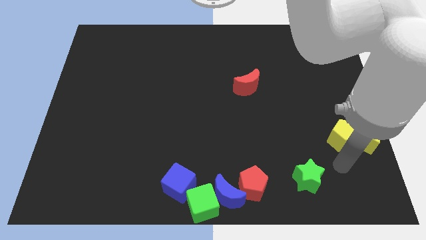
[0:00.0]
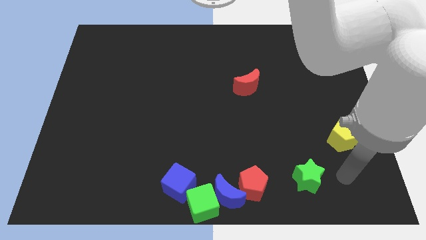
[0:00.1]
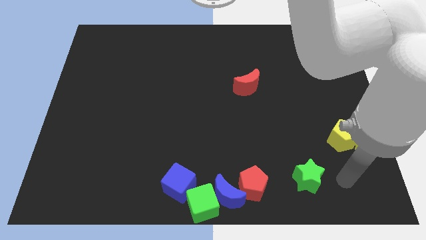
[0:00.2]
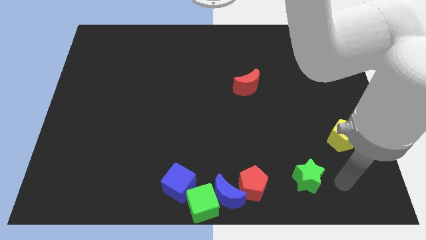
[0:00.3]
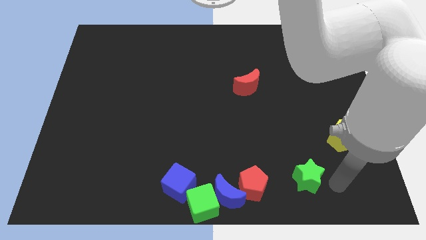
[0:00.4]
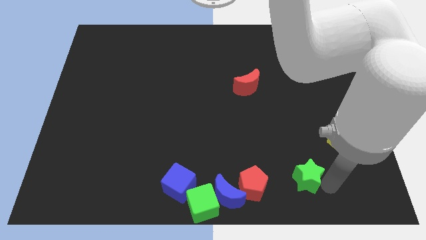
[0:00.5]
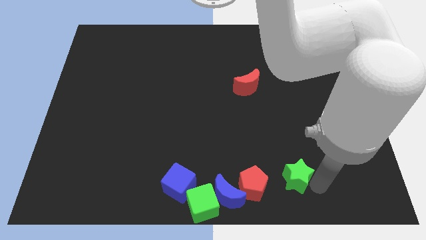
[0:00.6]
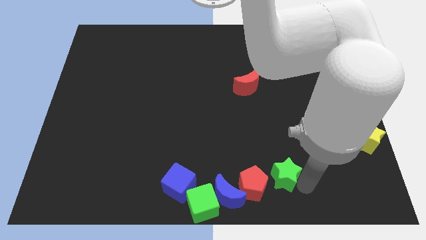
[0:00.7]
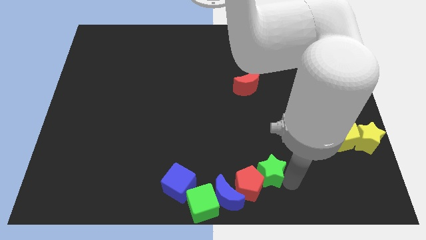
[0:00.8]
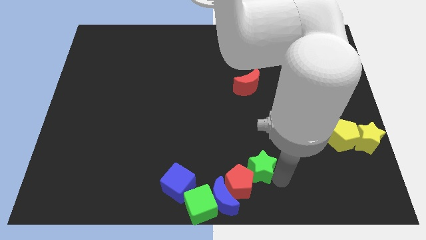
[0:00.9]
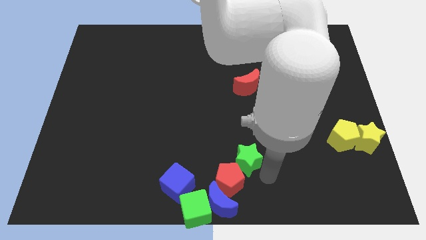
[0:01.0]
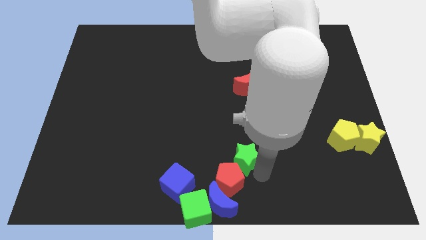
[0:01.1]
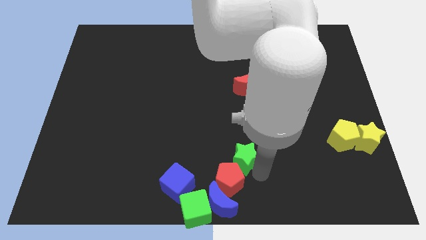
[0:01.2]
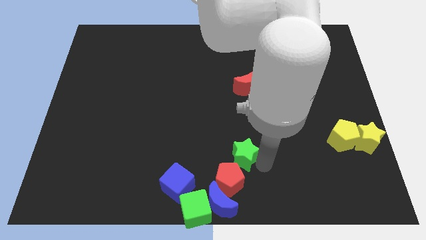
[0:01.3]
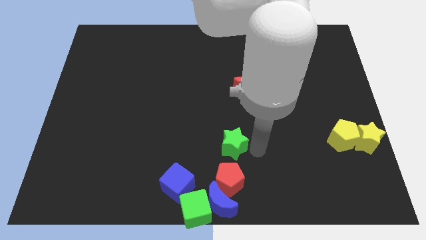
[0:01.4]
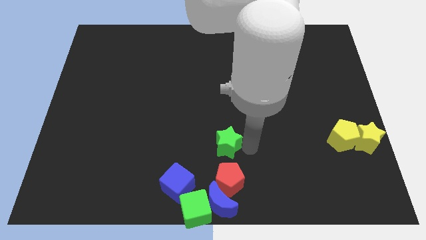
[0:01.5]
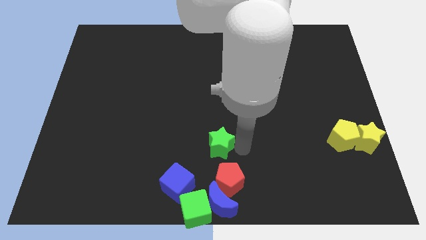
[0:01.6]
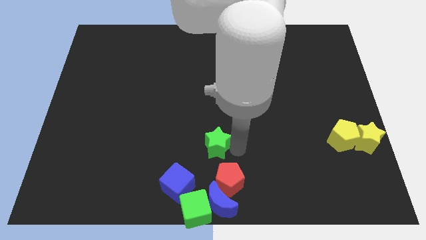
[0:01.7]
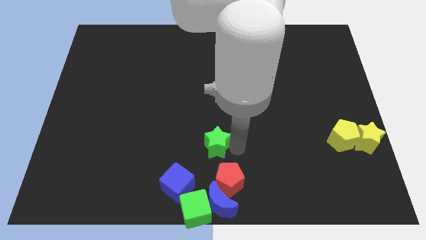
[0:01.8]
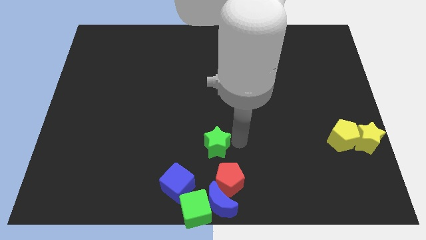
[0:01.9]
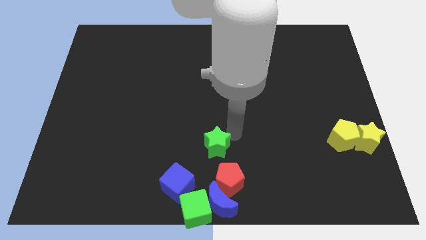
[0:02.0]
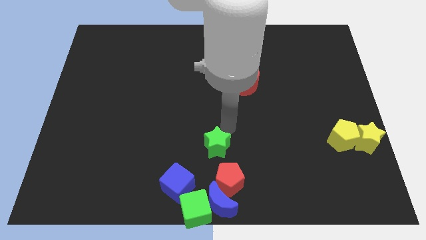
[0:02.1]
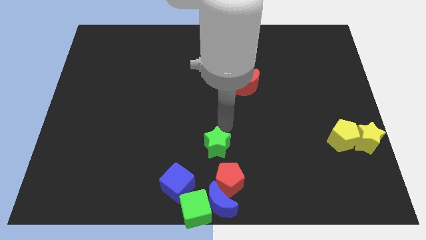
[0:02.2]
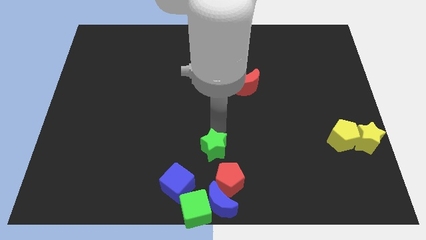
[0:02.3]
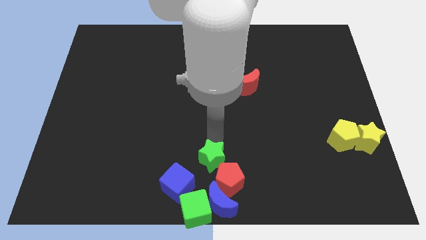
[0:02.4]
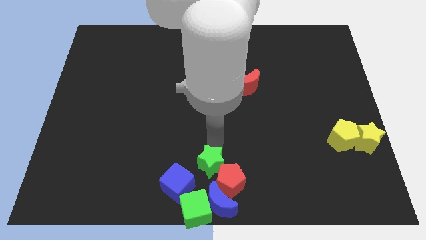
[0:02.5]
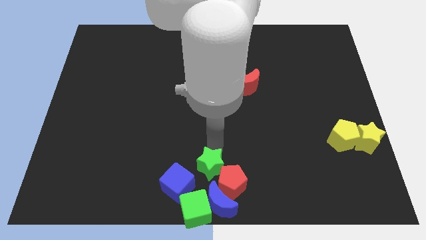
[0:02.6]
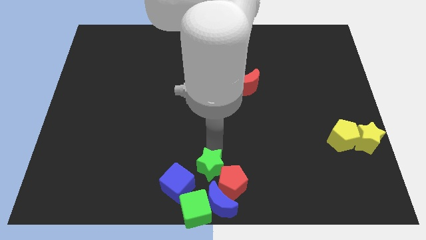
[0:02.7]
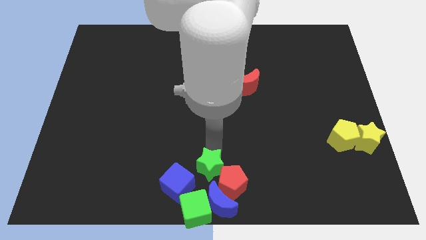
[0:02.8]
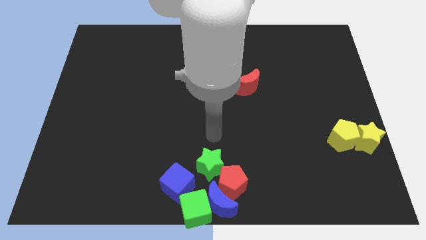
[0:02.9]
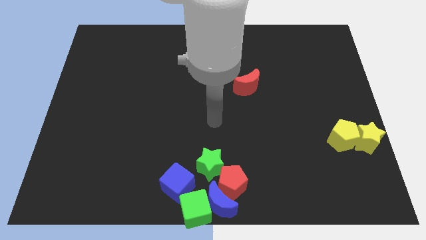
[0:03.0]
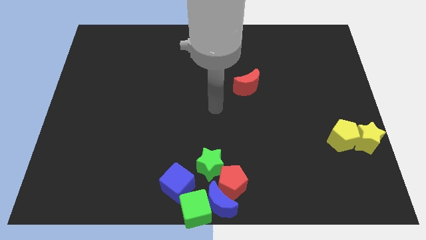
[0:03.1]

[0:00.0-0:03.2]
move the green star on the top left of the red pentagon

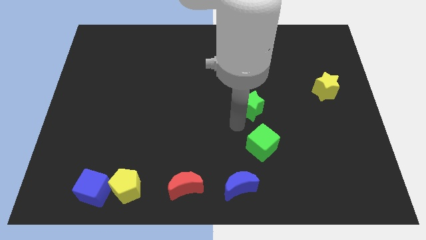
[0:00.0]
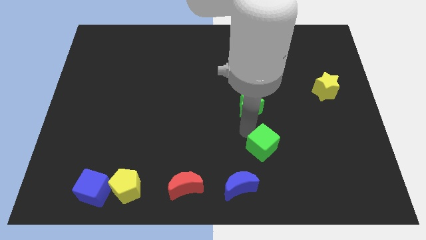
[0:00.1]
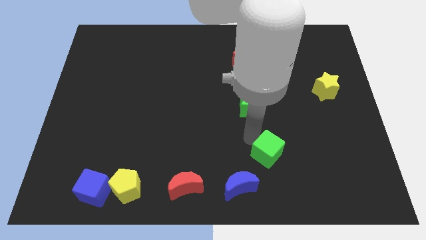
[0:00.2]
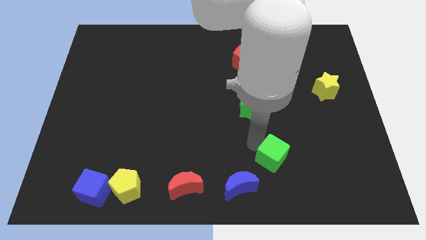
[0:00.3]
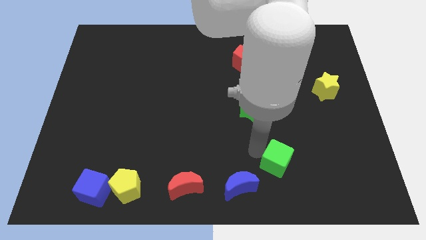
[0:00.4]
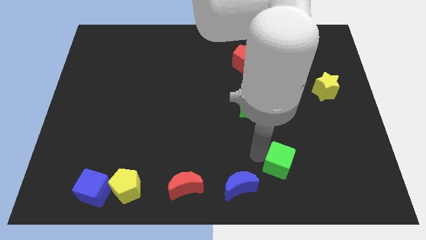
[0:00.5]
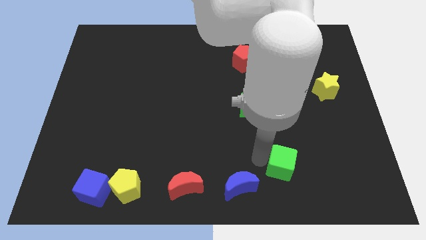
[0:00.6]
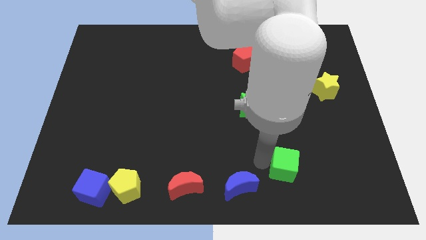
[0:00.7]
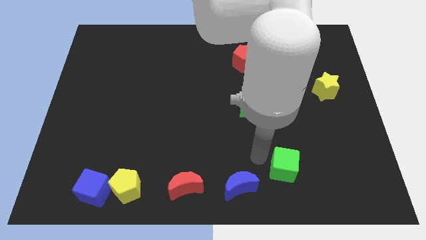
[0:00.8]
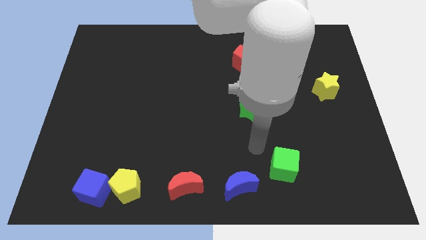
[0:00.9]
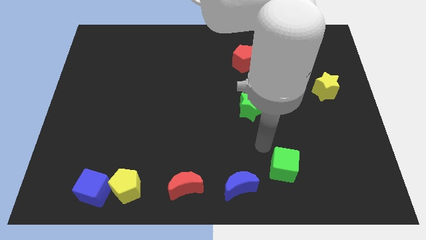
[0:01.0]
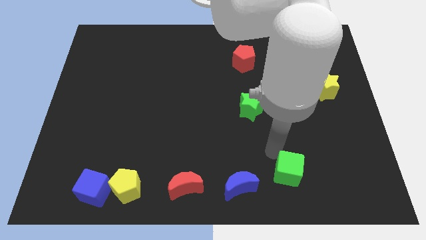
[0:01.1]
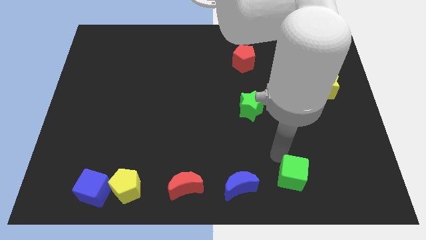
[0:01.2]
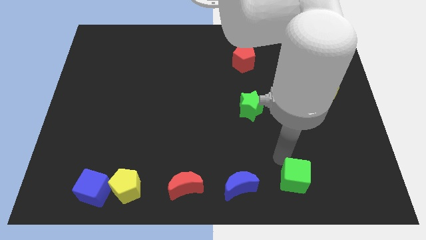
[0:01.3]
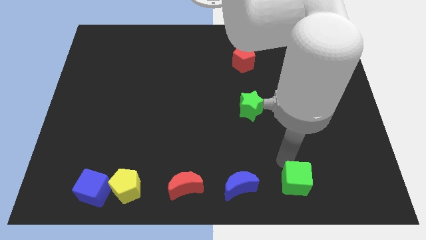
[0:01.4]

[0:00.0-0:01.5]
slide the green cube diagonally bottom right to the green star

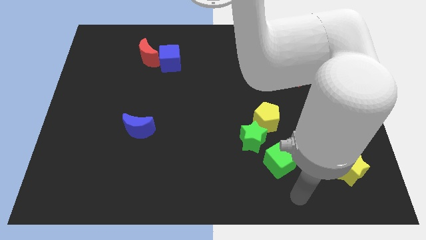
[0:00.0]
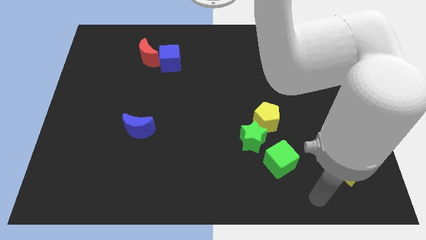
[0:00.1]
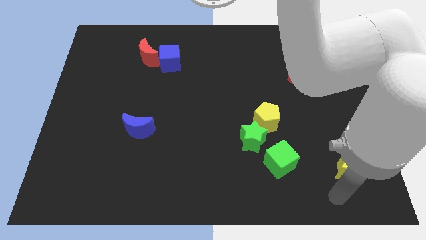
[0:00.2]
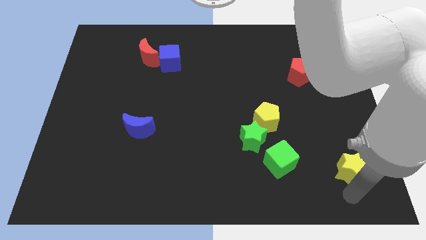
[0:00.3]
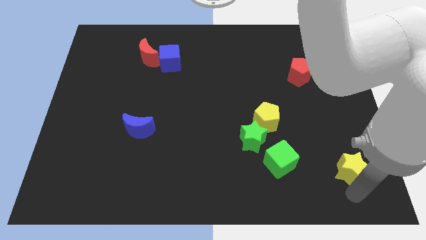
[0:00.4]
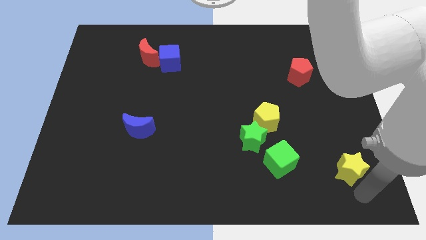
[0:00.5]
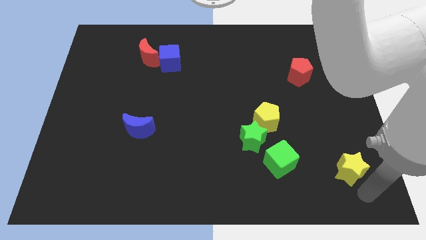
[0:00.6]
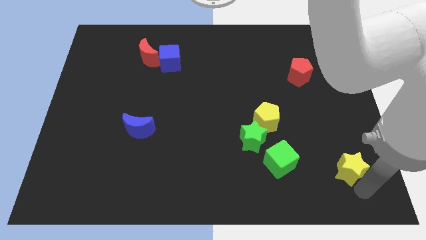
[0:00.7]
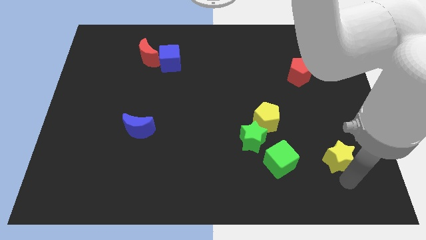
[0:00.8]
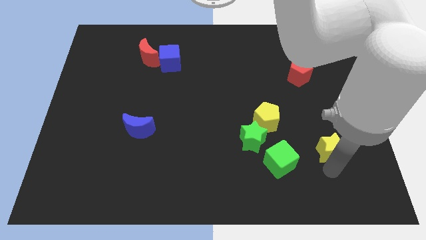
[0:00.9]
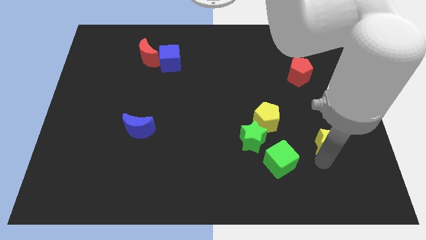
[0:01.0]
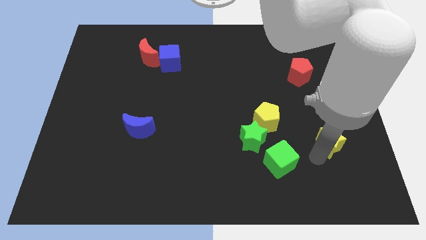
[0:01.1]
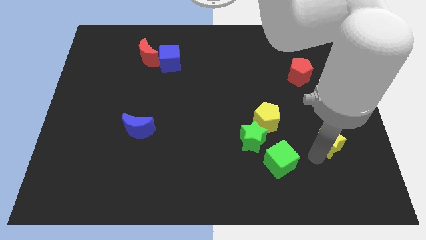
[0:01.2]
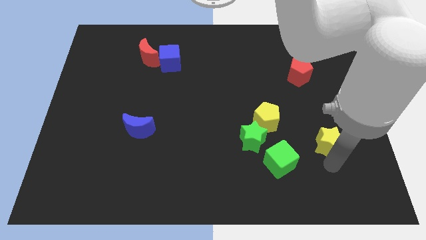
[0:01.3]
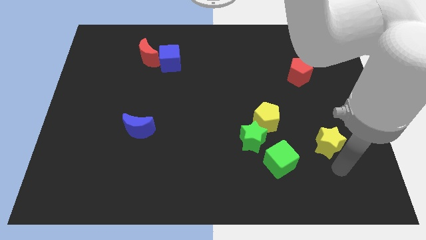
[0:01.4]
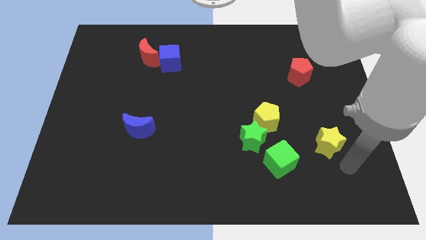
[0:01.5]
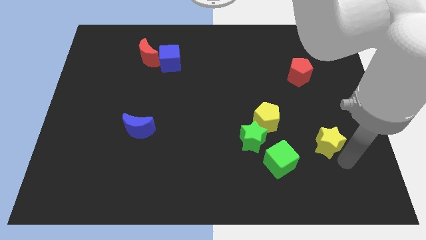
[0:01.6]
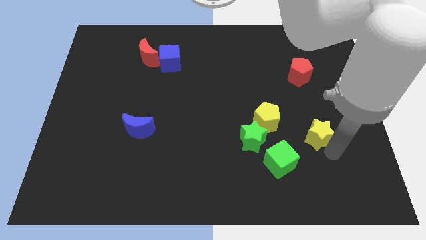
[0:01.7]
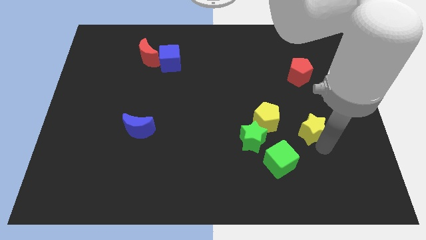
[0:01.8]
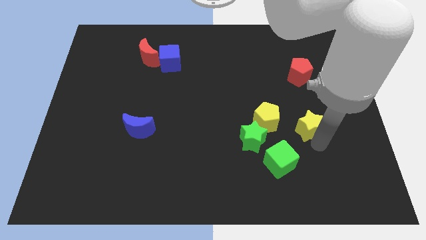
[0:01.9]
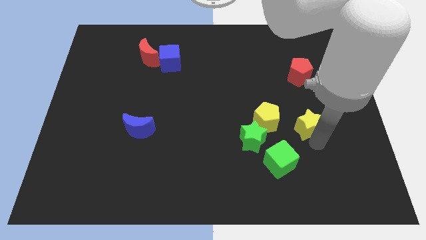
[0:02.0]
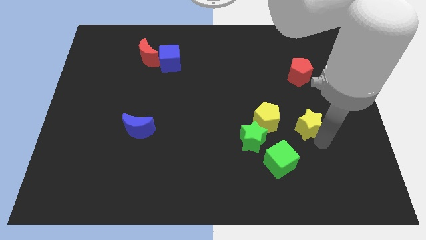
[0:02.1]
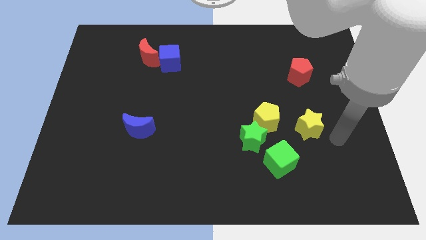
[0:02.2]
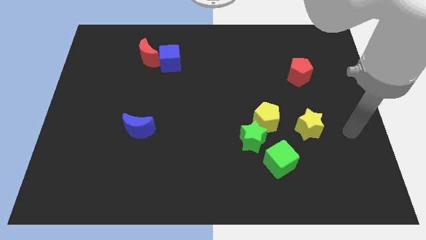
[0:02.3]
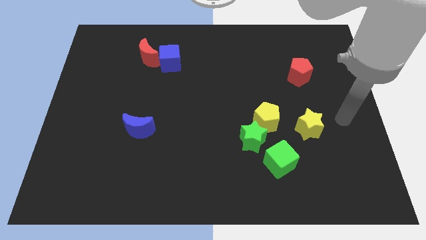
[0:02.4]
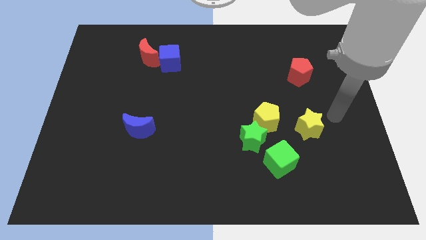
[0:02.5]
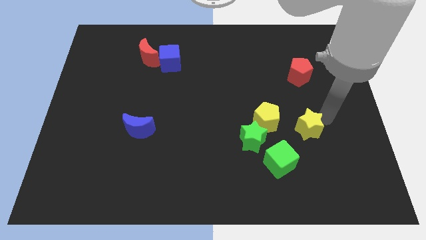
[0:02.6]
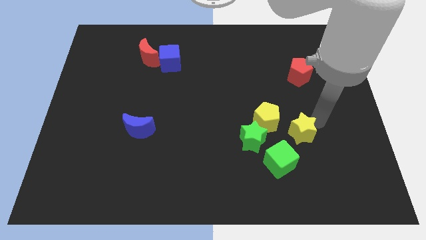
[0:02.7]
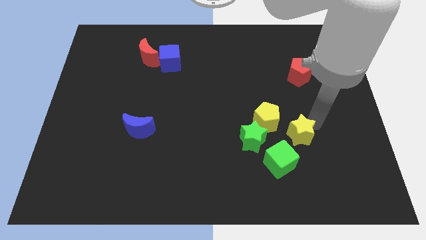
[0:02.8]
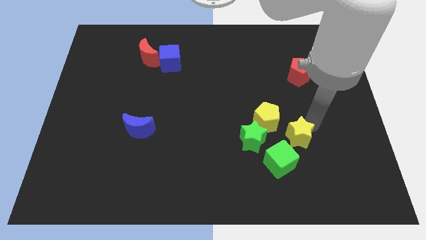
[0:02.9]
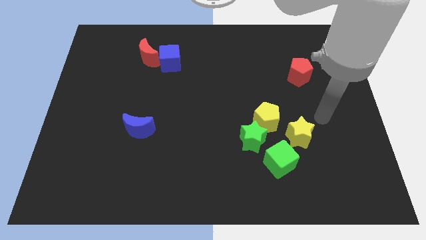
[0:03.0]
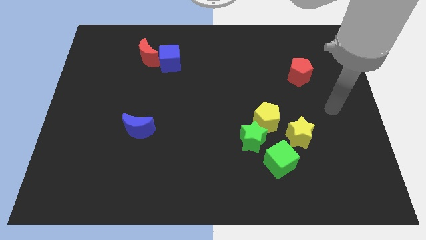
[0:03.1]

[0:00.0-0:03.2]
put the yellow star vertically below the red pentagon
